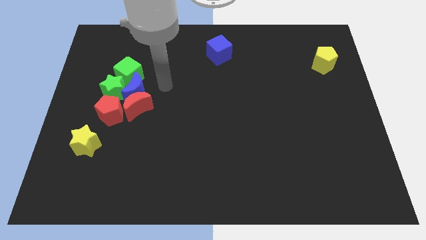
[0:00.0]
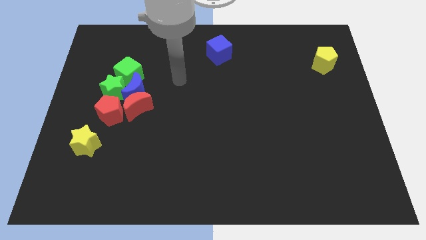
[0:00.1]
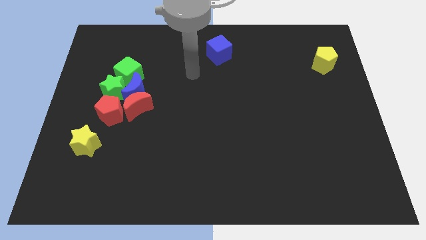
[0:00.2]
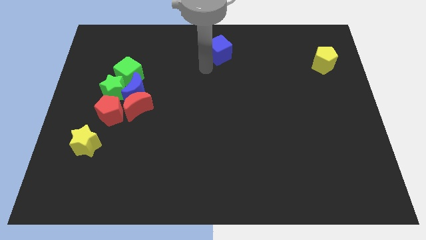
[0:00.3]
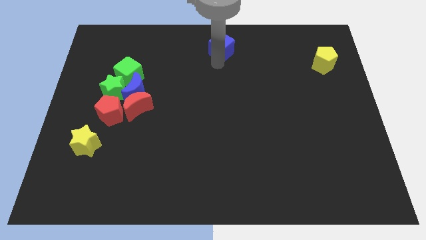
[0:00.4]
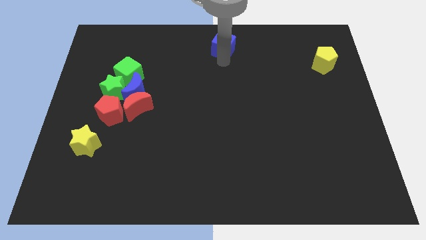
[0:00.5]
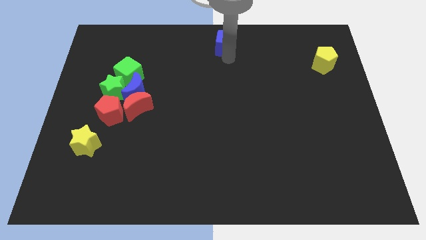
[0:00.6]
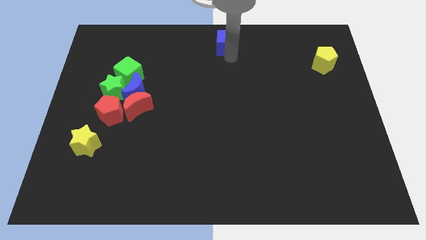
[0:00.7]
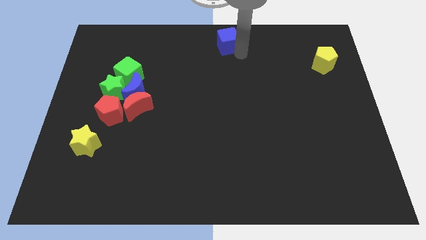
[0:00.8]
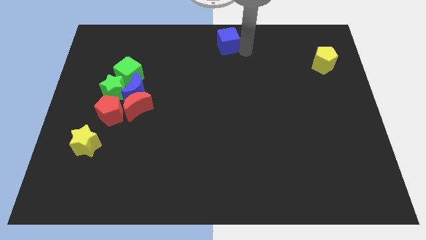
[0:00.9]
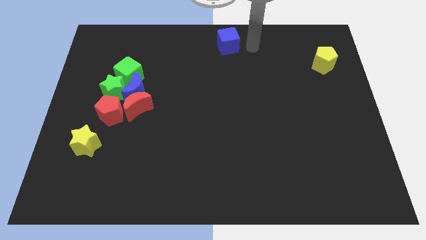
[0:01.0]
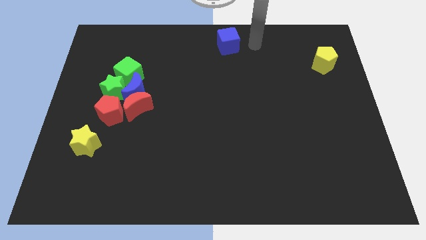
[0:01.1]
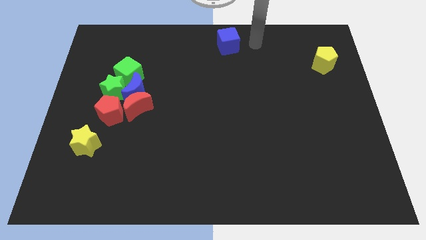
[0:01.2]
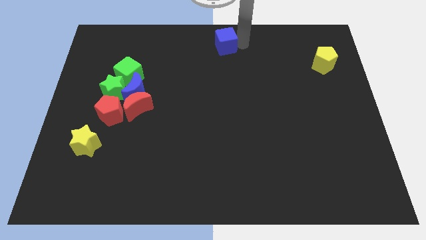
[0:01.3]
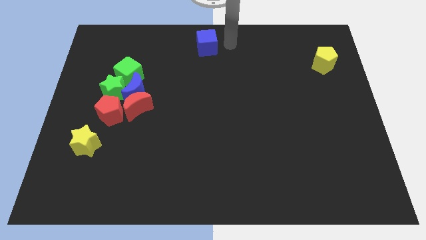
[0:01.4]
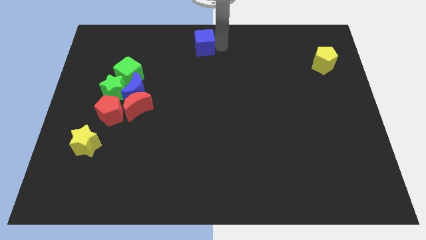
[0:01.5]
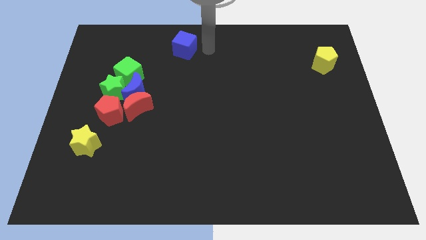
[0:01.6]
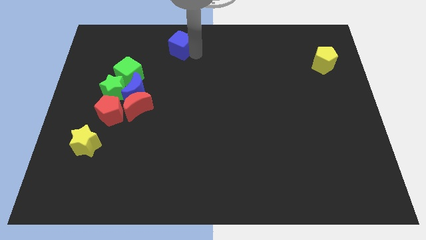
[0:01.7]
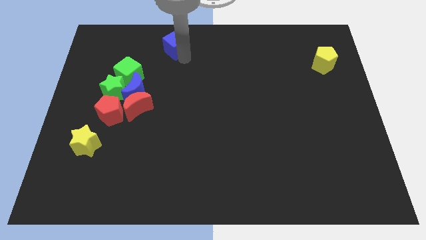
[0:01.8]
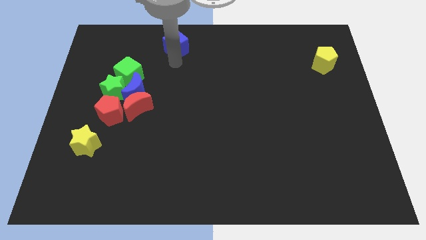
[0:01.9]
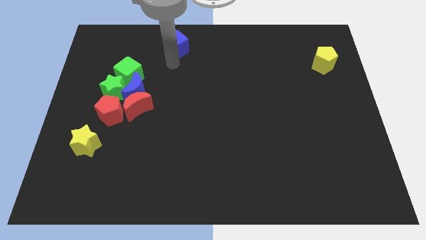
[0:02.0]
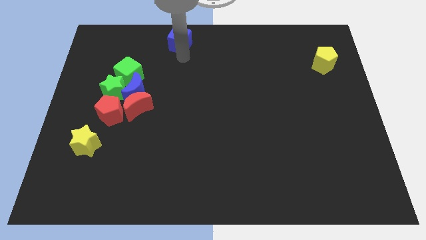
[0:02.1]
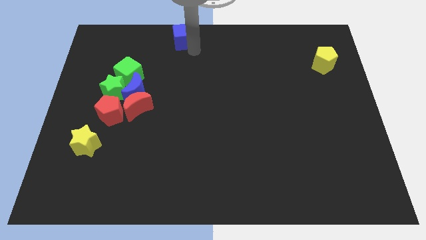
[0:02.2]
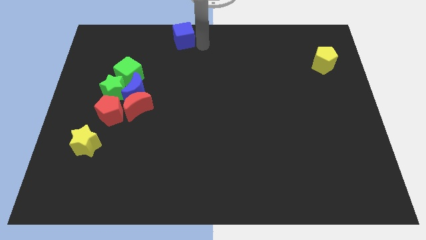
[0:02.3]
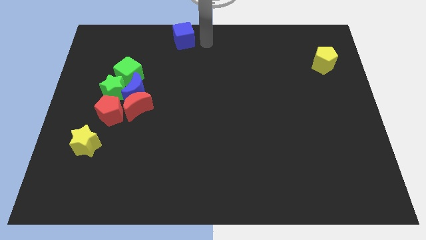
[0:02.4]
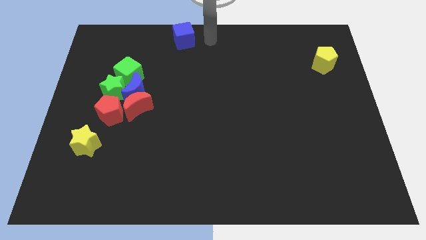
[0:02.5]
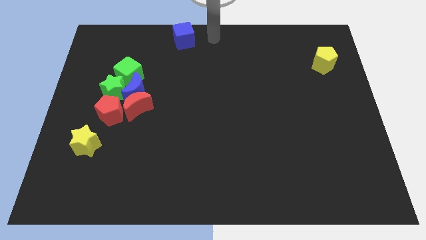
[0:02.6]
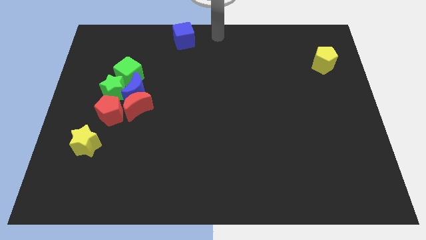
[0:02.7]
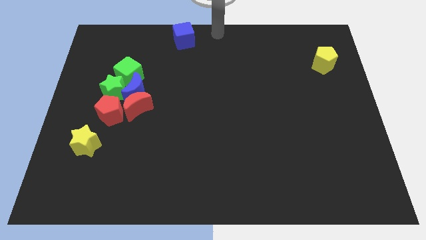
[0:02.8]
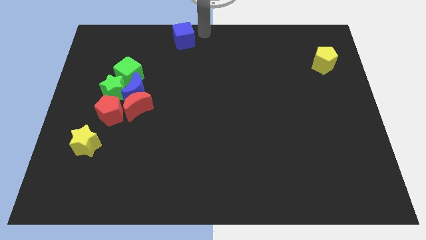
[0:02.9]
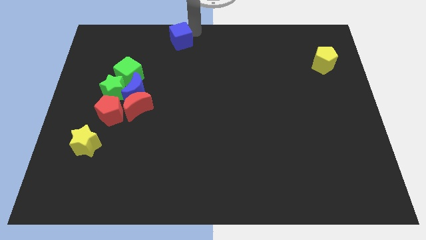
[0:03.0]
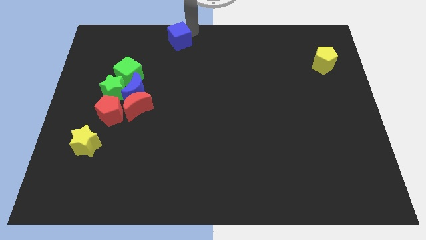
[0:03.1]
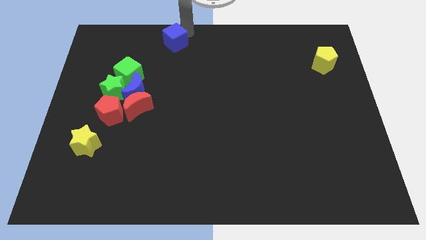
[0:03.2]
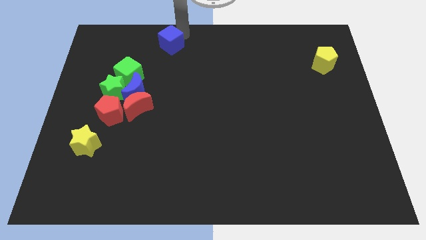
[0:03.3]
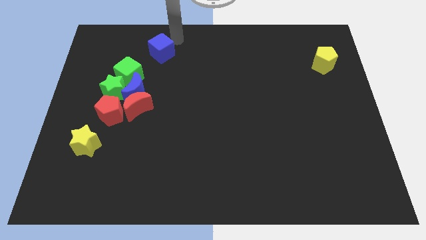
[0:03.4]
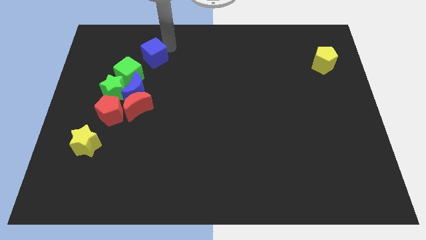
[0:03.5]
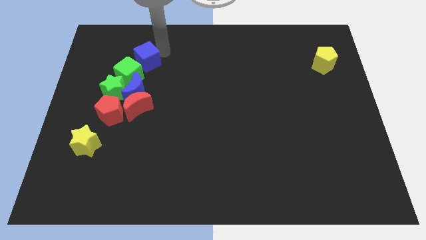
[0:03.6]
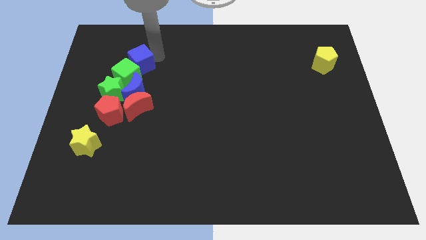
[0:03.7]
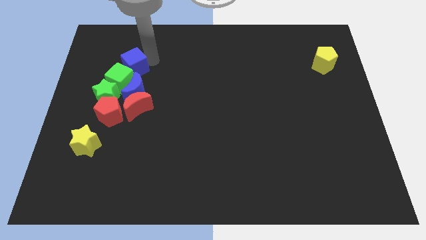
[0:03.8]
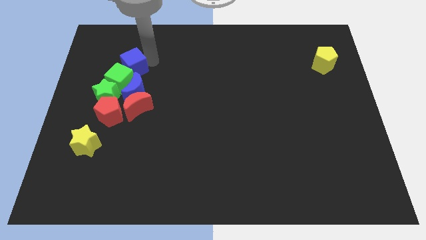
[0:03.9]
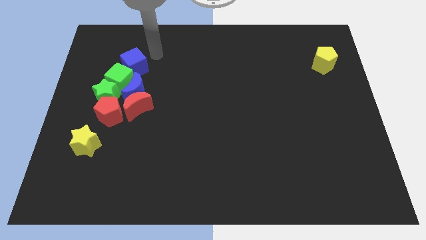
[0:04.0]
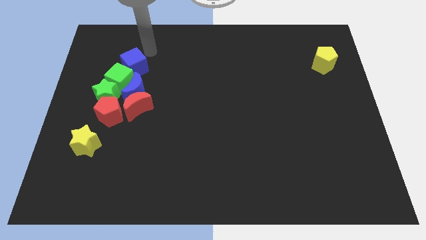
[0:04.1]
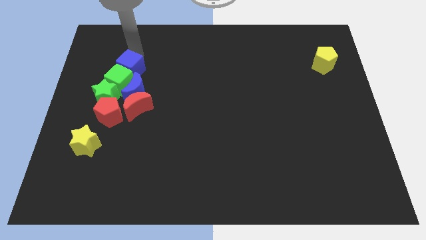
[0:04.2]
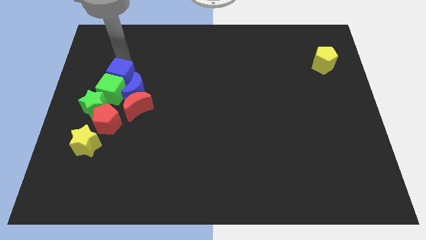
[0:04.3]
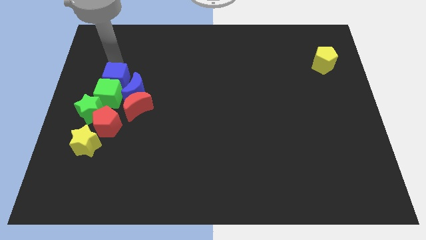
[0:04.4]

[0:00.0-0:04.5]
move the blue cube into the group of blocks

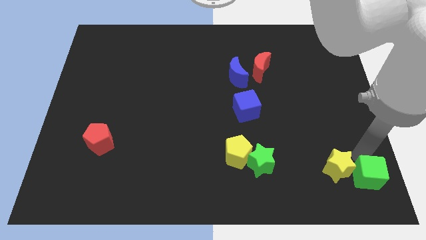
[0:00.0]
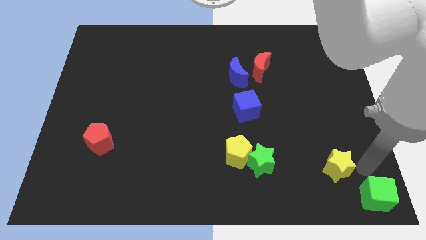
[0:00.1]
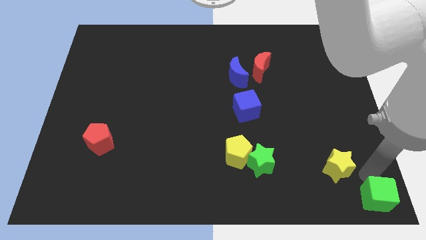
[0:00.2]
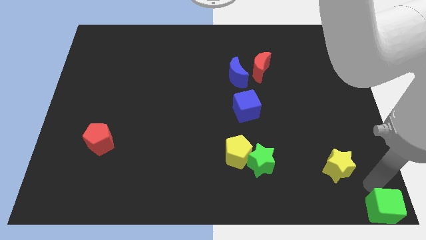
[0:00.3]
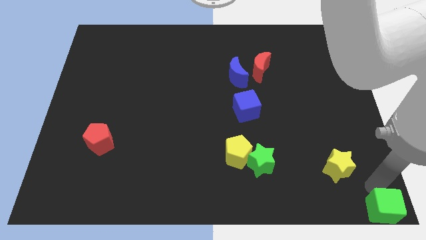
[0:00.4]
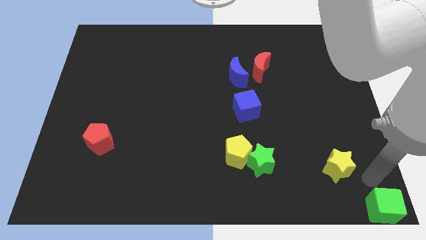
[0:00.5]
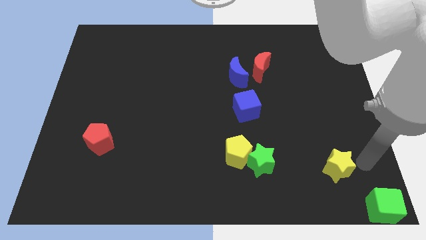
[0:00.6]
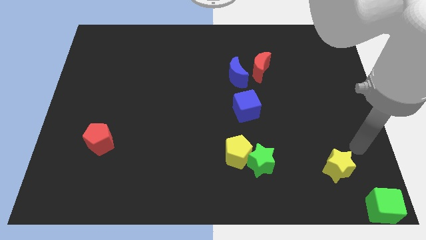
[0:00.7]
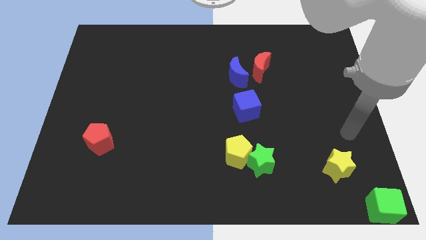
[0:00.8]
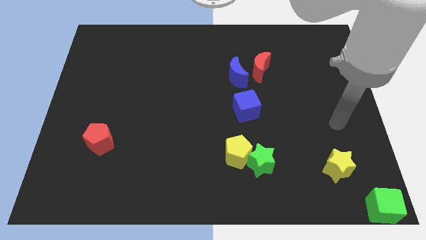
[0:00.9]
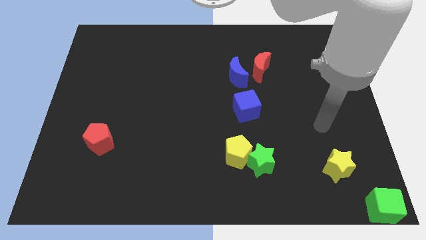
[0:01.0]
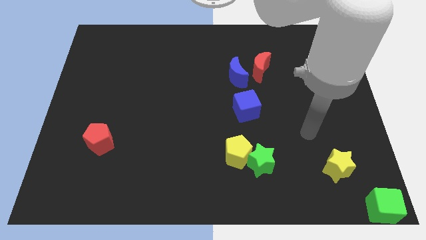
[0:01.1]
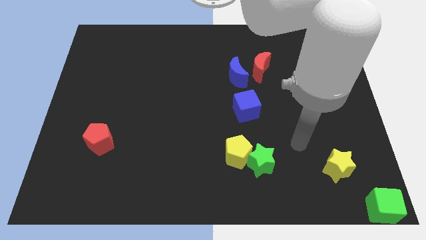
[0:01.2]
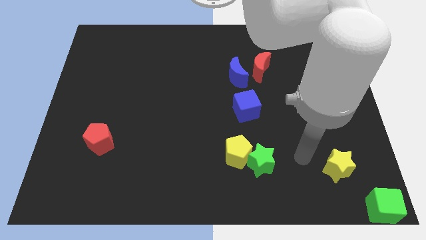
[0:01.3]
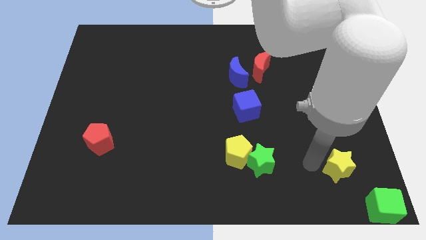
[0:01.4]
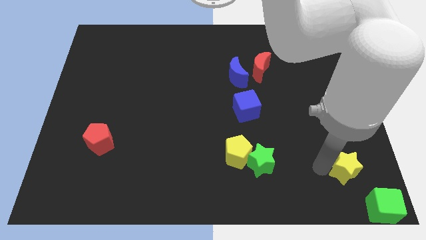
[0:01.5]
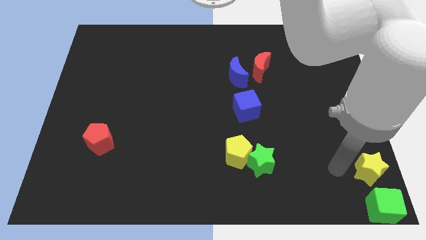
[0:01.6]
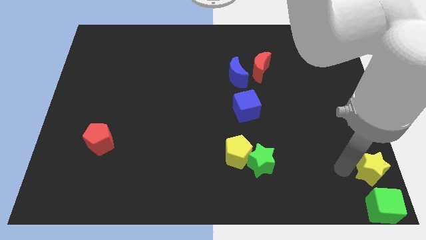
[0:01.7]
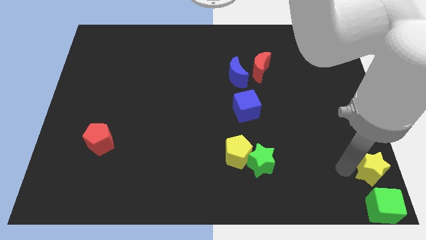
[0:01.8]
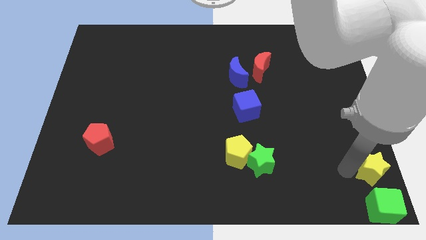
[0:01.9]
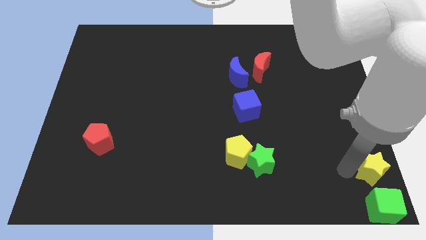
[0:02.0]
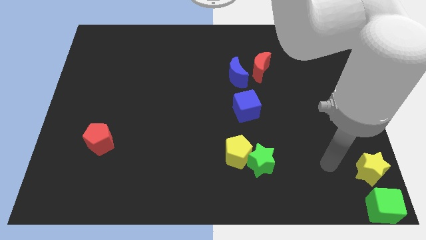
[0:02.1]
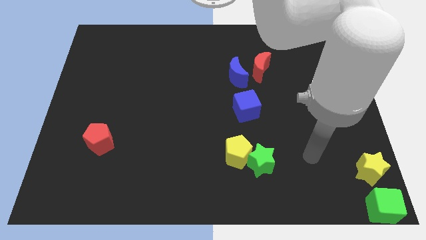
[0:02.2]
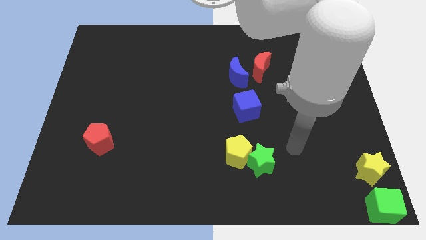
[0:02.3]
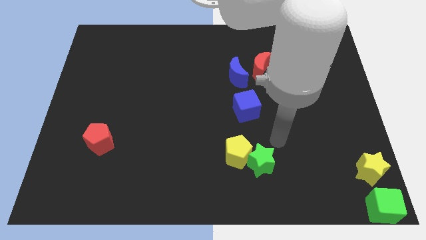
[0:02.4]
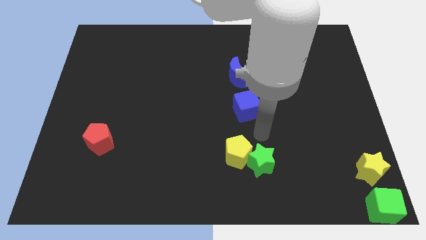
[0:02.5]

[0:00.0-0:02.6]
separate green cube from yellow star

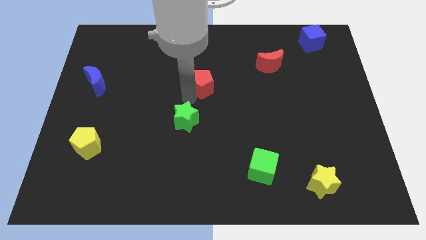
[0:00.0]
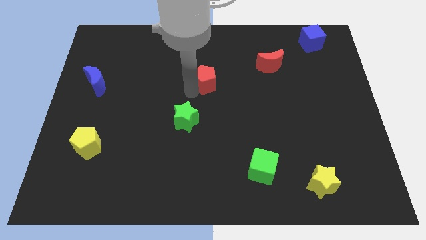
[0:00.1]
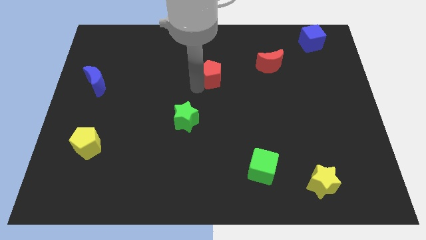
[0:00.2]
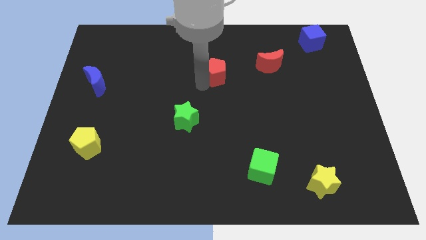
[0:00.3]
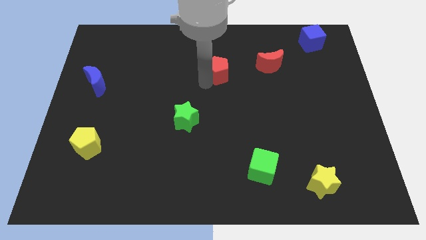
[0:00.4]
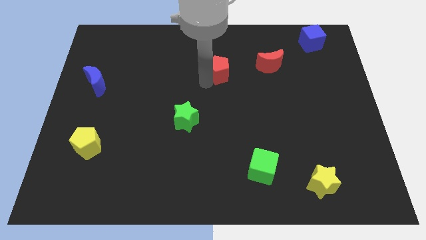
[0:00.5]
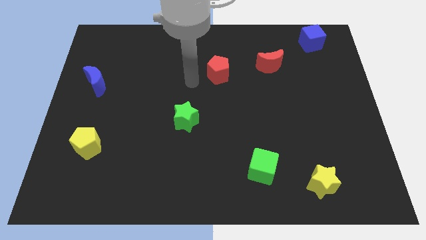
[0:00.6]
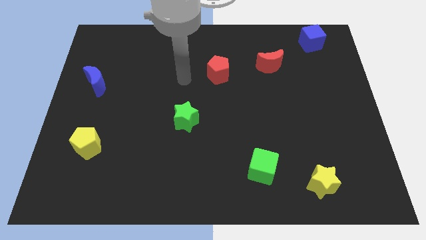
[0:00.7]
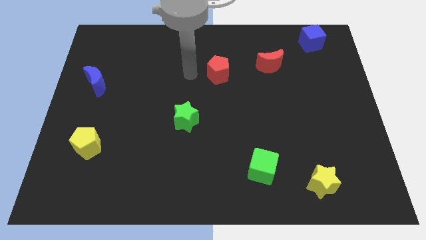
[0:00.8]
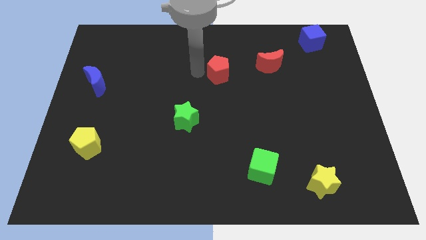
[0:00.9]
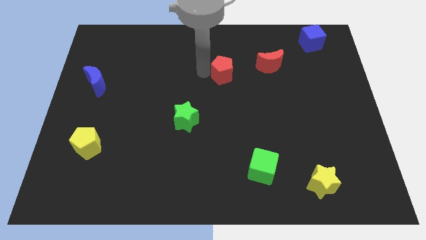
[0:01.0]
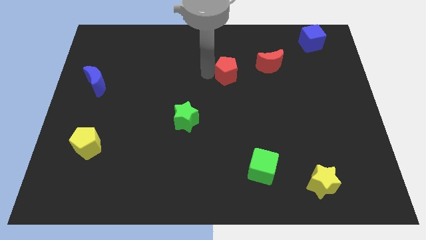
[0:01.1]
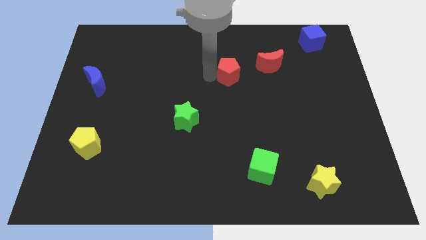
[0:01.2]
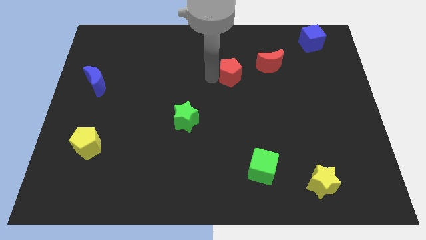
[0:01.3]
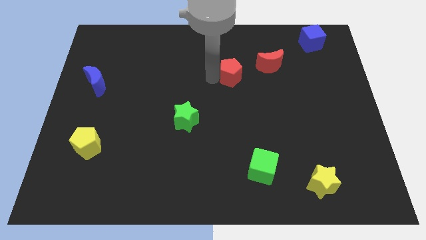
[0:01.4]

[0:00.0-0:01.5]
put the red pentagon towards the red crescent

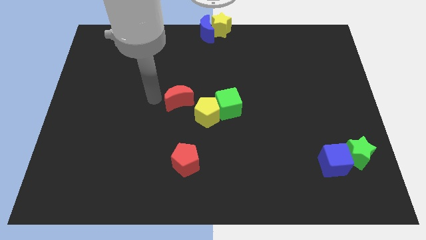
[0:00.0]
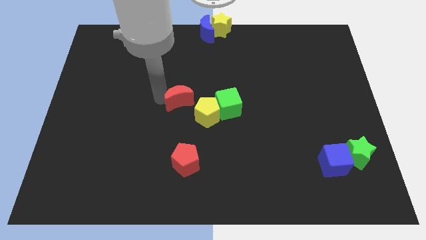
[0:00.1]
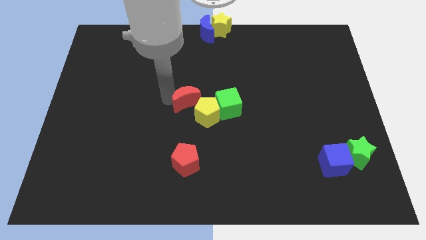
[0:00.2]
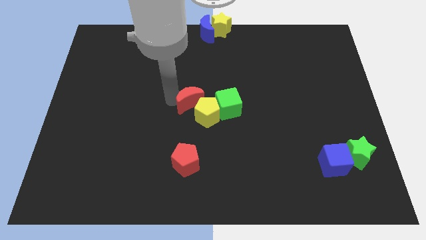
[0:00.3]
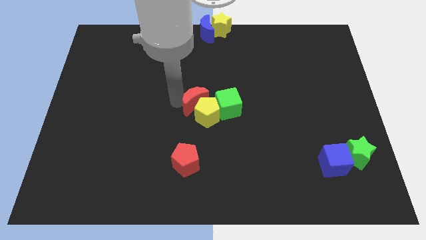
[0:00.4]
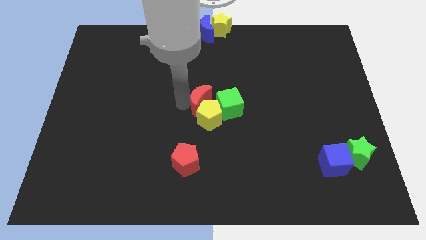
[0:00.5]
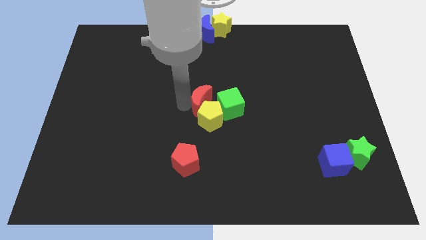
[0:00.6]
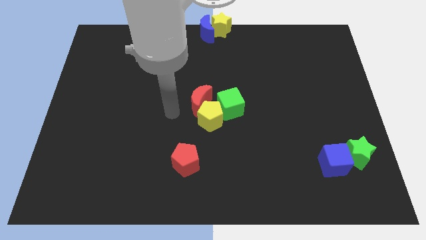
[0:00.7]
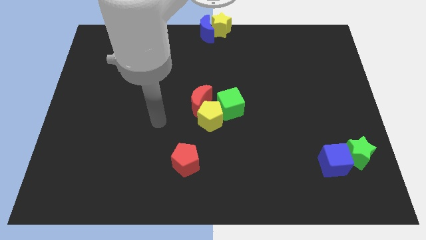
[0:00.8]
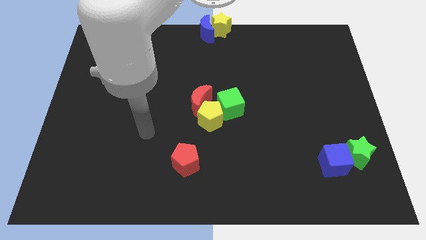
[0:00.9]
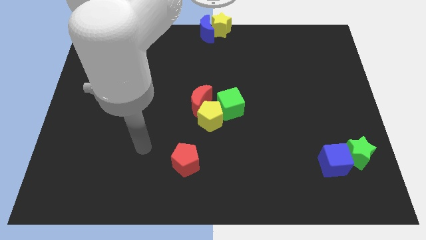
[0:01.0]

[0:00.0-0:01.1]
place red moon above yellow pentagon
